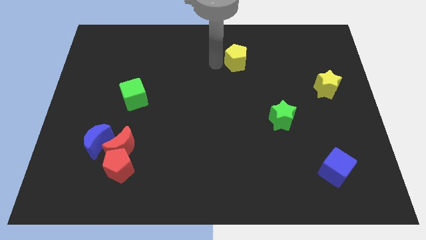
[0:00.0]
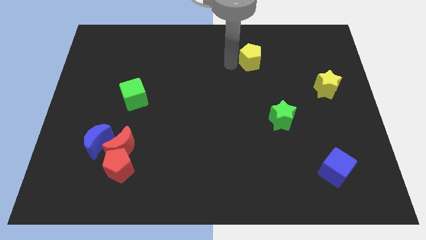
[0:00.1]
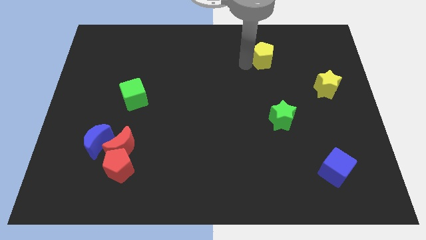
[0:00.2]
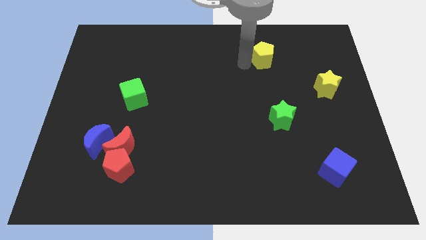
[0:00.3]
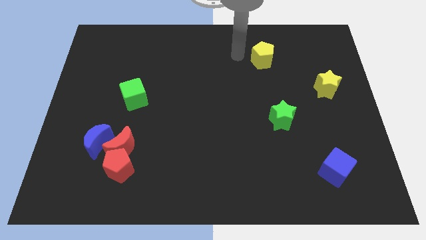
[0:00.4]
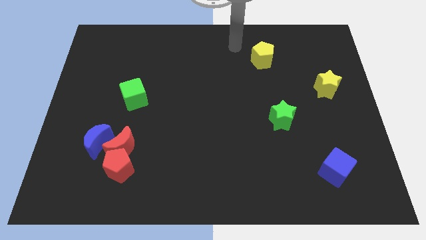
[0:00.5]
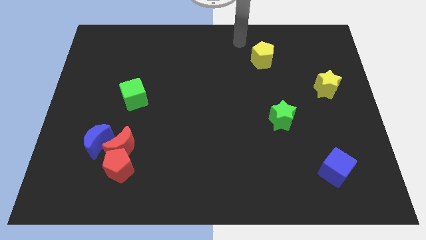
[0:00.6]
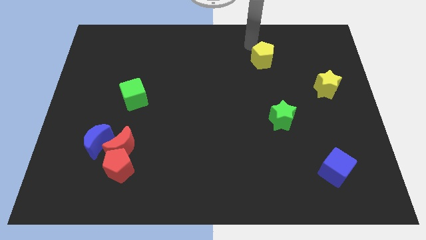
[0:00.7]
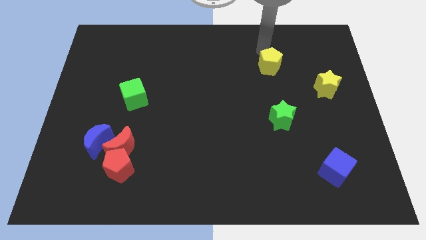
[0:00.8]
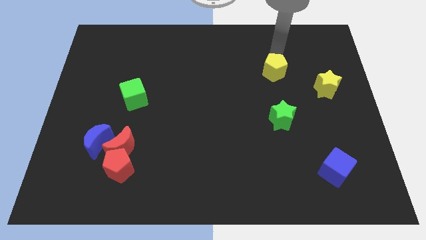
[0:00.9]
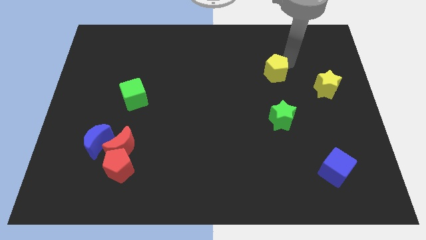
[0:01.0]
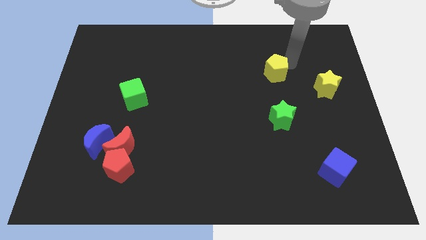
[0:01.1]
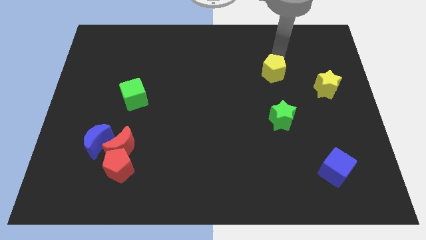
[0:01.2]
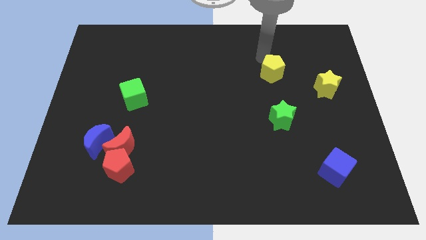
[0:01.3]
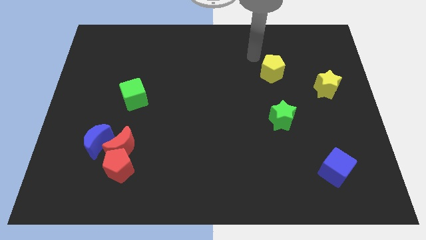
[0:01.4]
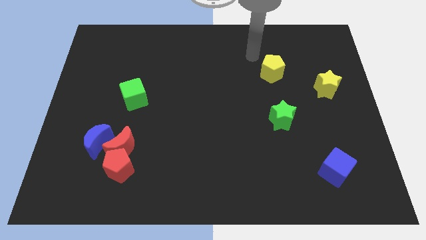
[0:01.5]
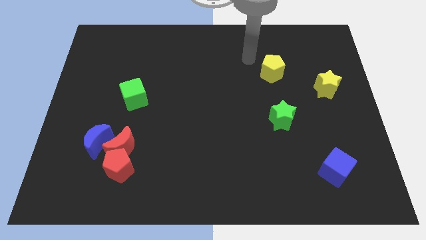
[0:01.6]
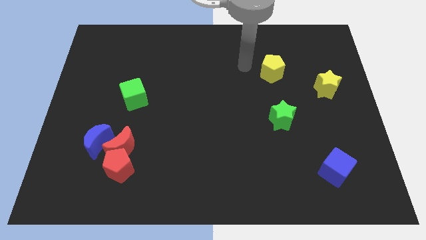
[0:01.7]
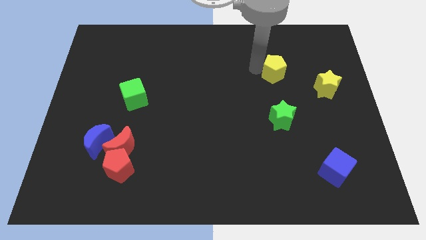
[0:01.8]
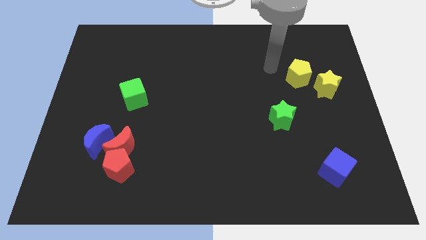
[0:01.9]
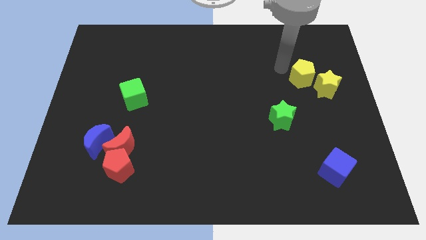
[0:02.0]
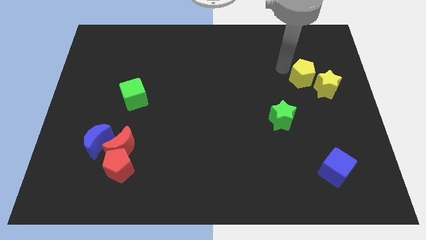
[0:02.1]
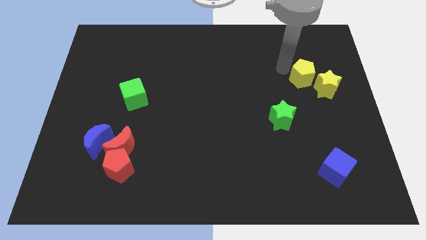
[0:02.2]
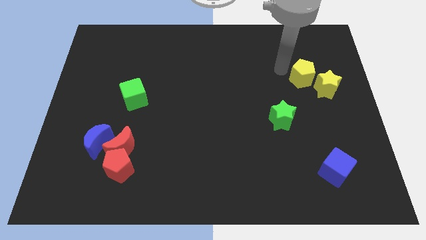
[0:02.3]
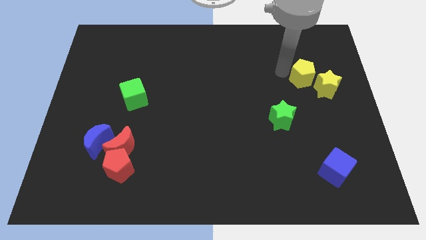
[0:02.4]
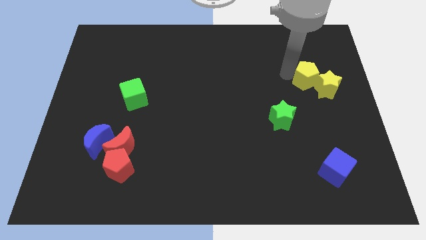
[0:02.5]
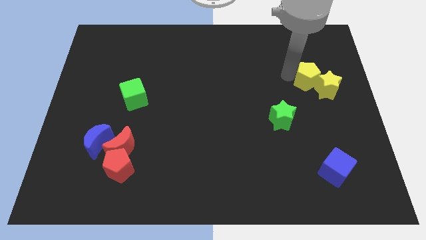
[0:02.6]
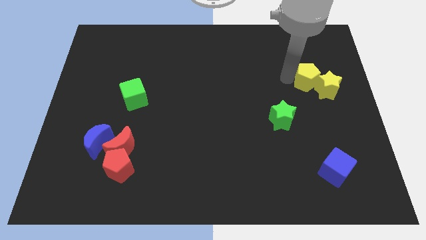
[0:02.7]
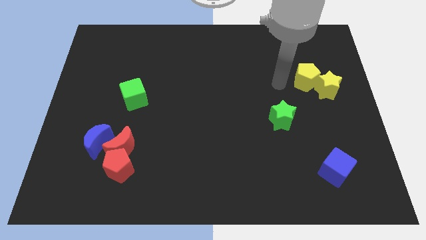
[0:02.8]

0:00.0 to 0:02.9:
group up the yellow blocks together at the top right side of the green star

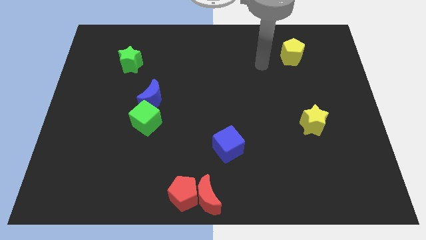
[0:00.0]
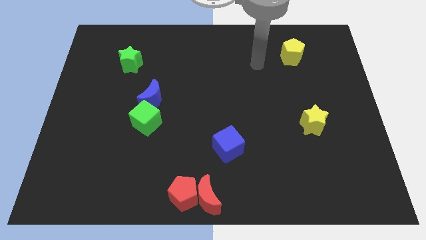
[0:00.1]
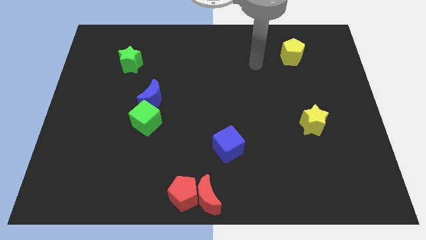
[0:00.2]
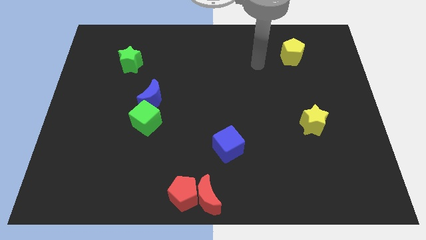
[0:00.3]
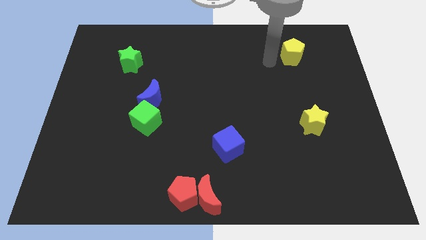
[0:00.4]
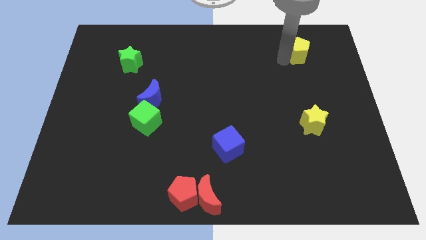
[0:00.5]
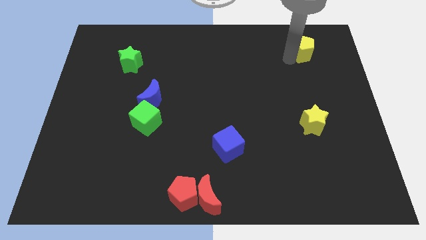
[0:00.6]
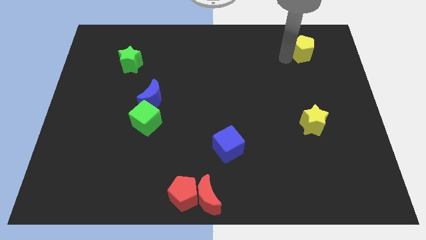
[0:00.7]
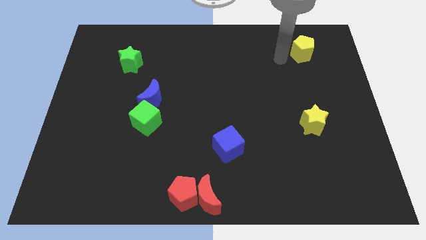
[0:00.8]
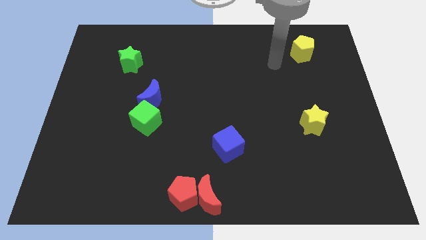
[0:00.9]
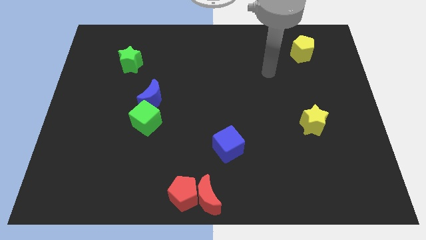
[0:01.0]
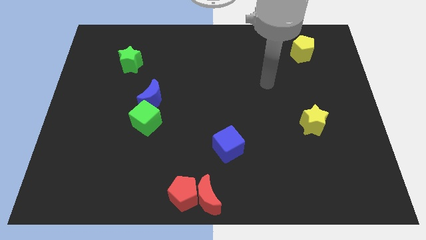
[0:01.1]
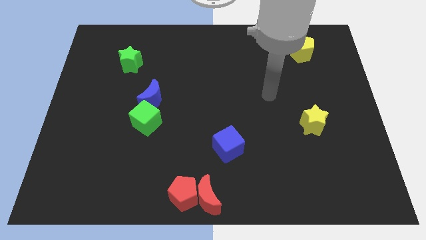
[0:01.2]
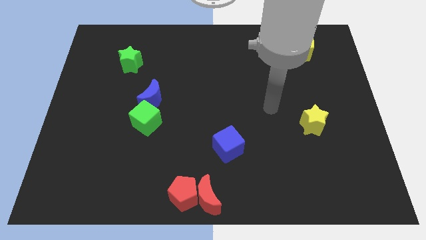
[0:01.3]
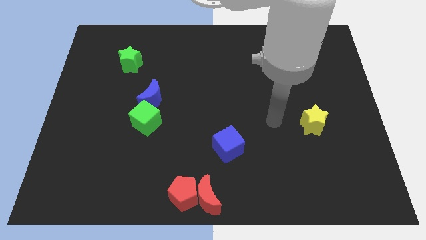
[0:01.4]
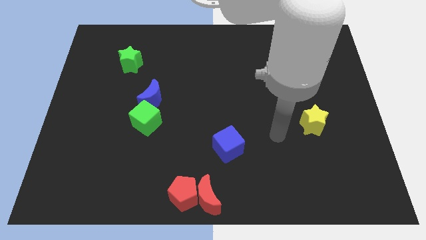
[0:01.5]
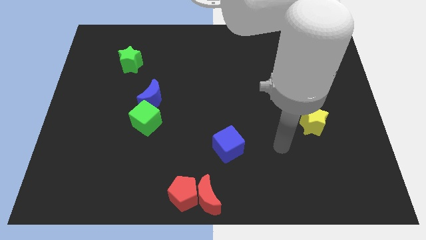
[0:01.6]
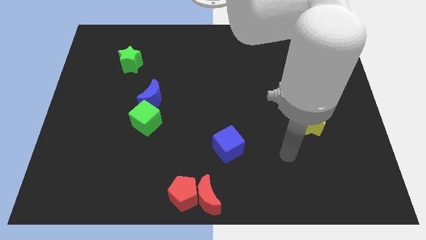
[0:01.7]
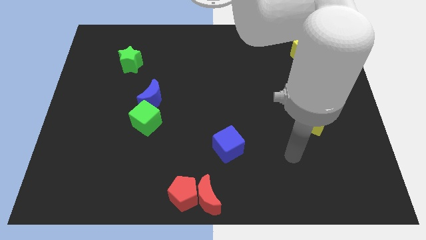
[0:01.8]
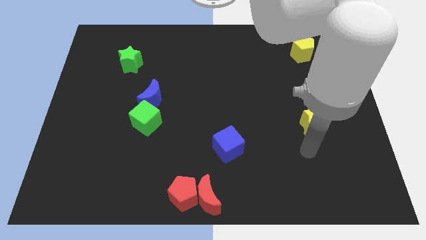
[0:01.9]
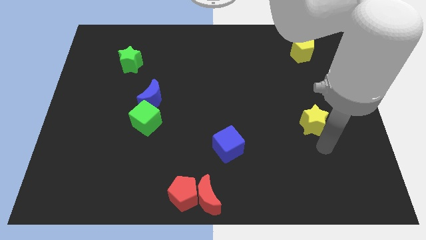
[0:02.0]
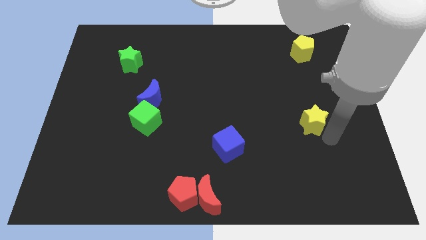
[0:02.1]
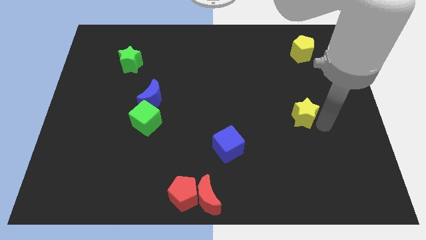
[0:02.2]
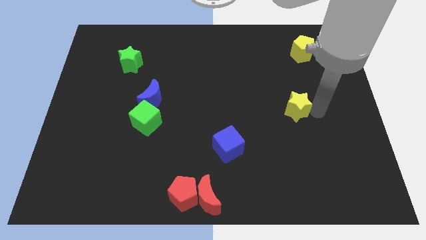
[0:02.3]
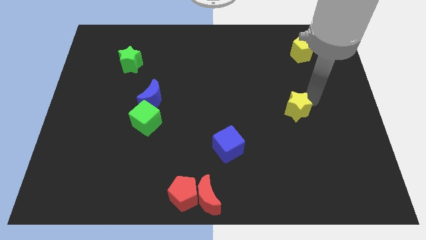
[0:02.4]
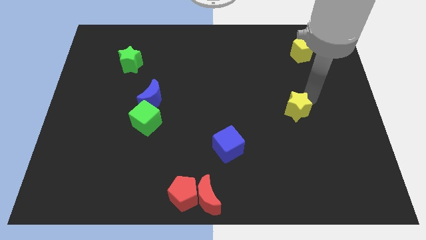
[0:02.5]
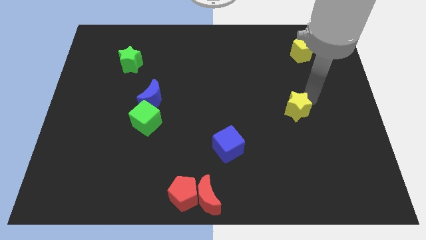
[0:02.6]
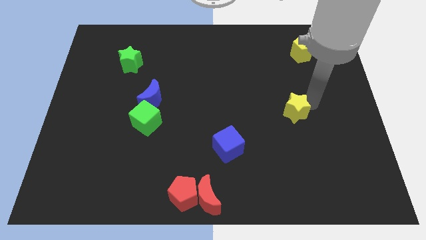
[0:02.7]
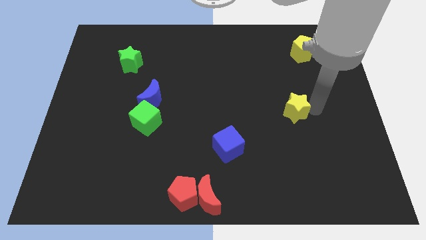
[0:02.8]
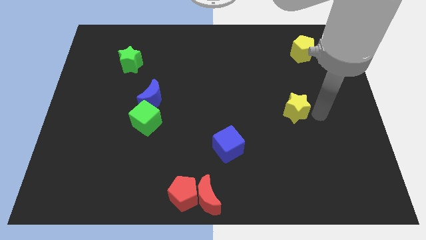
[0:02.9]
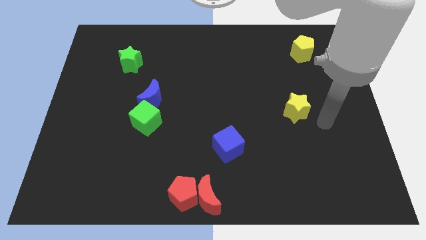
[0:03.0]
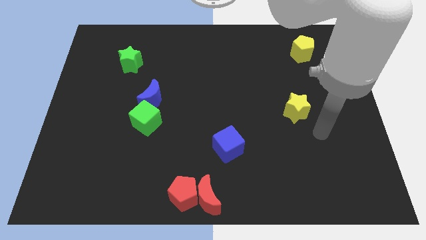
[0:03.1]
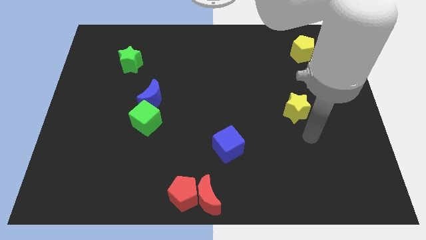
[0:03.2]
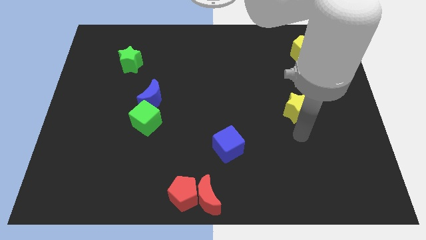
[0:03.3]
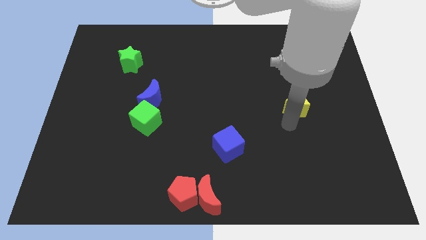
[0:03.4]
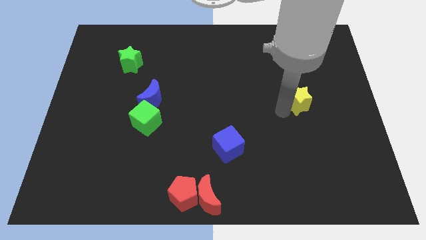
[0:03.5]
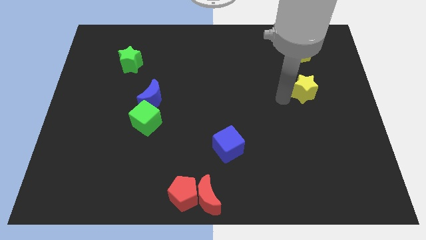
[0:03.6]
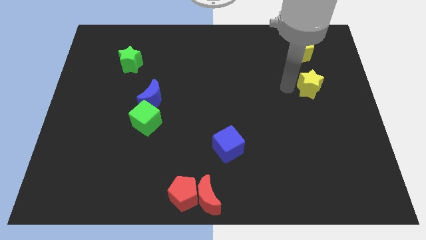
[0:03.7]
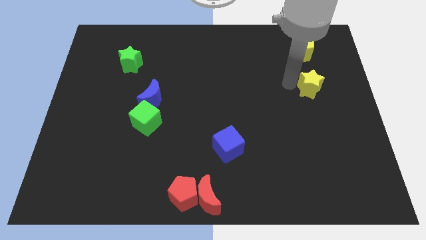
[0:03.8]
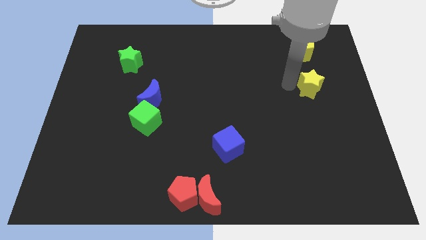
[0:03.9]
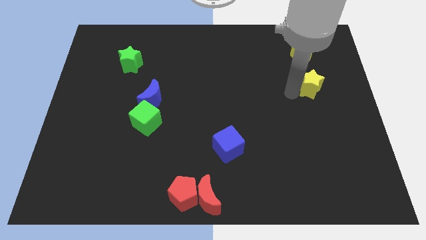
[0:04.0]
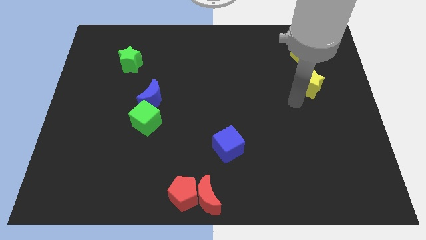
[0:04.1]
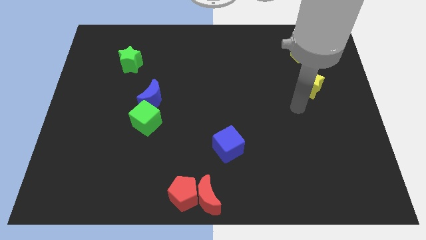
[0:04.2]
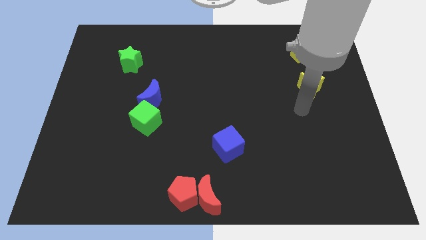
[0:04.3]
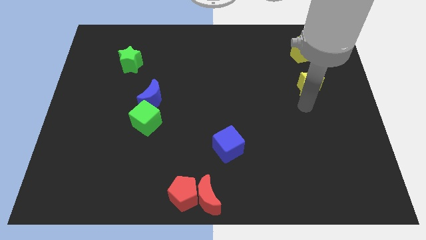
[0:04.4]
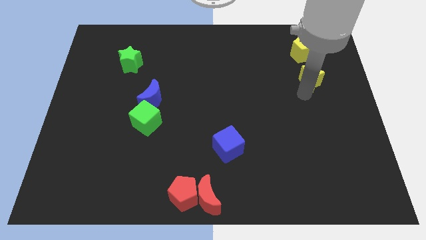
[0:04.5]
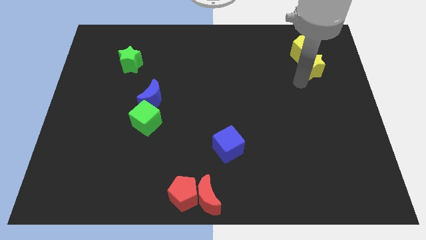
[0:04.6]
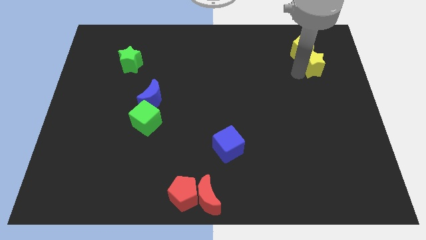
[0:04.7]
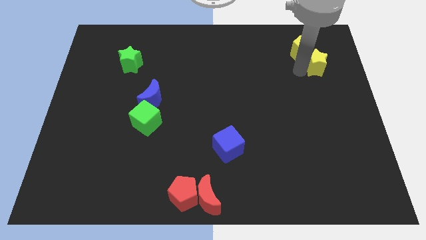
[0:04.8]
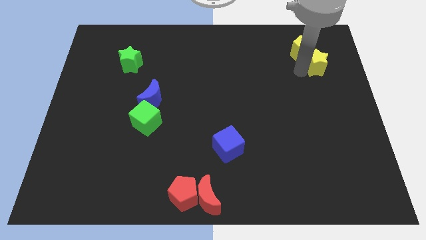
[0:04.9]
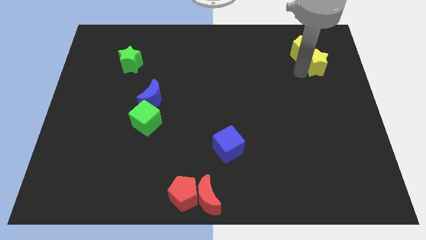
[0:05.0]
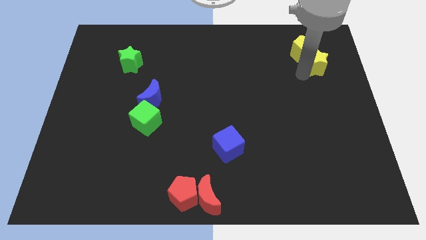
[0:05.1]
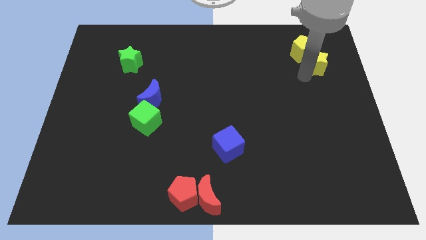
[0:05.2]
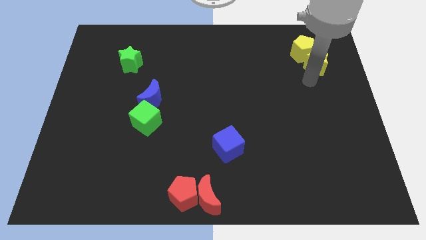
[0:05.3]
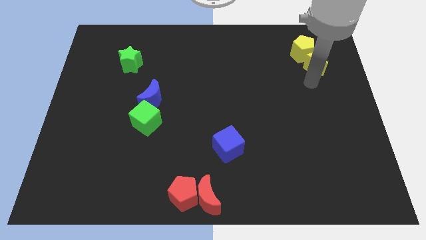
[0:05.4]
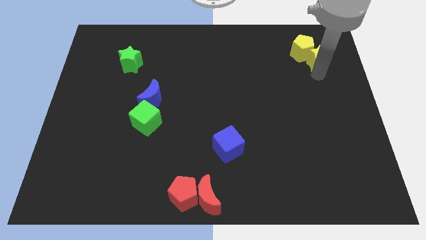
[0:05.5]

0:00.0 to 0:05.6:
slide the yellow star into the bottom right side of the yellow pentagon

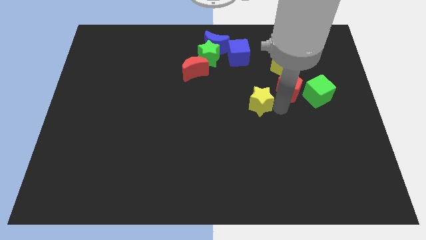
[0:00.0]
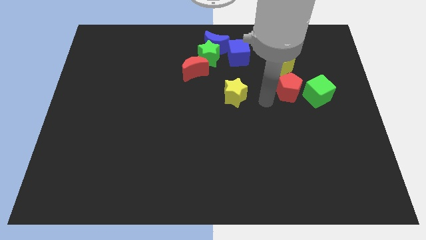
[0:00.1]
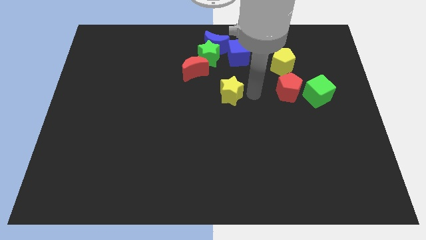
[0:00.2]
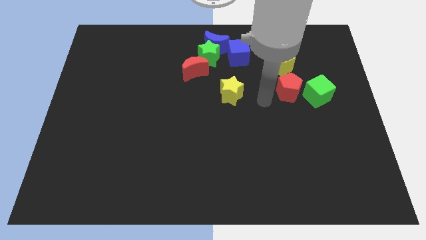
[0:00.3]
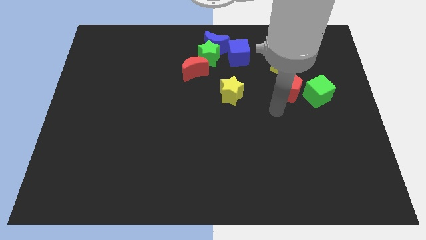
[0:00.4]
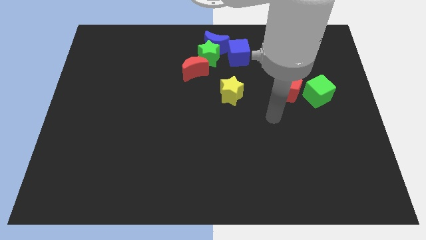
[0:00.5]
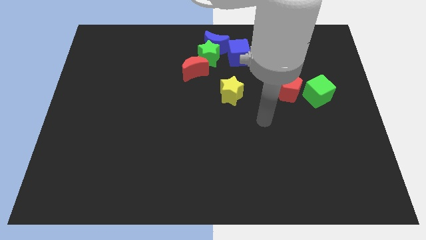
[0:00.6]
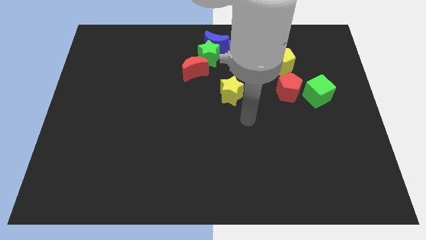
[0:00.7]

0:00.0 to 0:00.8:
move the yellow star to the center of the board
